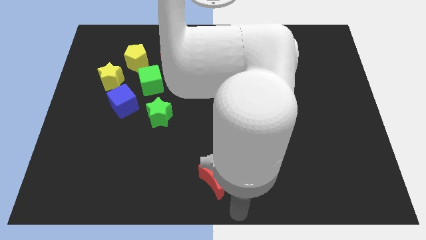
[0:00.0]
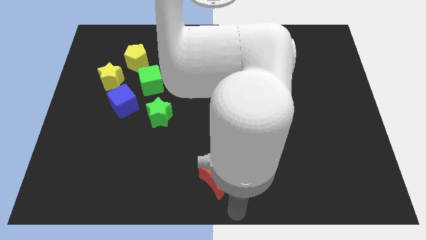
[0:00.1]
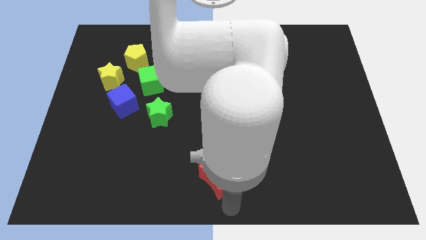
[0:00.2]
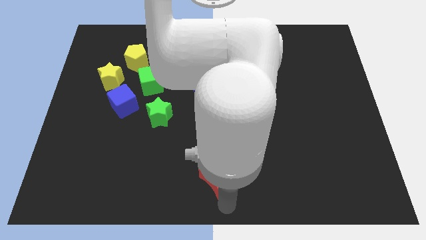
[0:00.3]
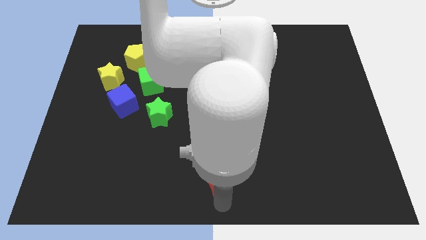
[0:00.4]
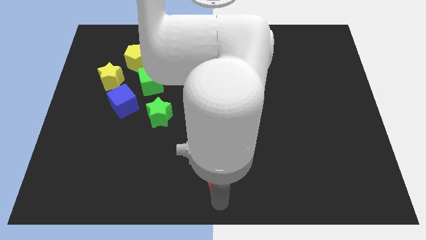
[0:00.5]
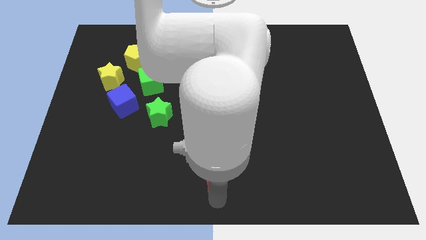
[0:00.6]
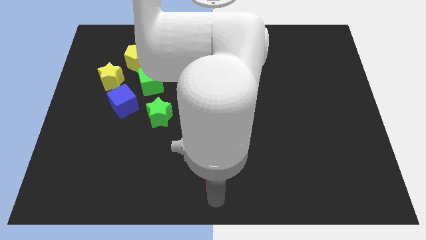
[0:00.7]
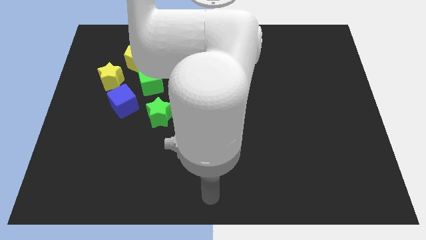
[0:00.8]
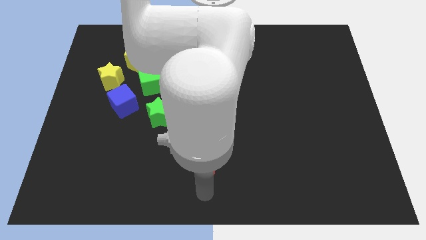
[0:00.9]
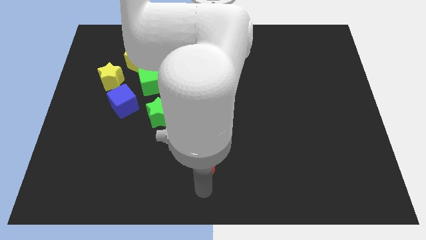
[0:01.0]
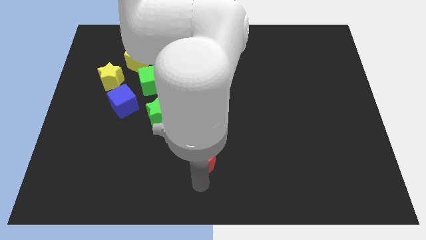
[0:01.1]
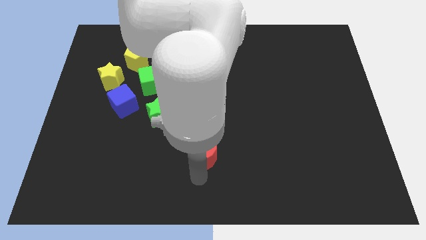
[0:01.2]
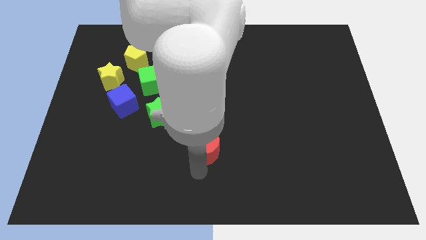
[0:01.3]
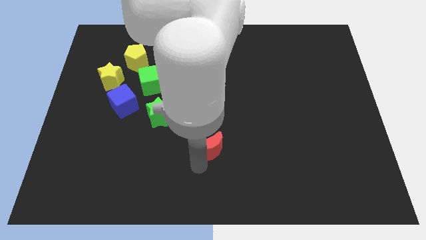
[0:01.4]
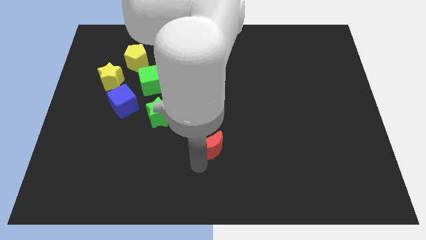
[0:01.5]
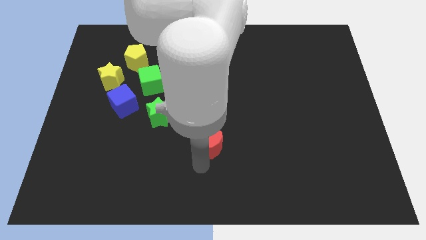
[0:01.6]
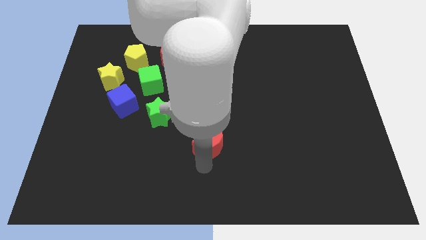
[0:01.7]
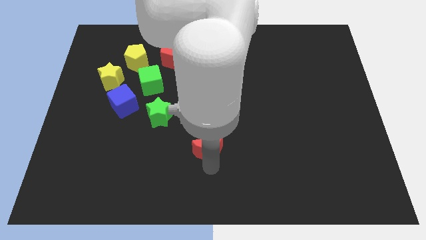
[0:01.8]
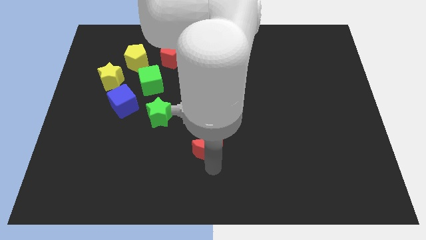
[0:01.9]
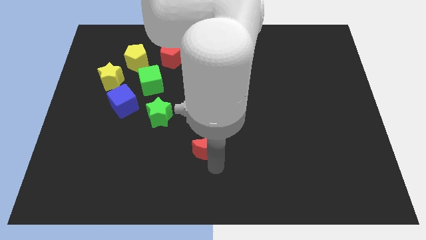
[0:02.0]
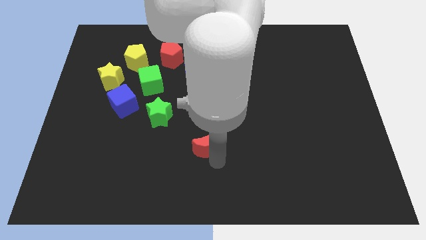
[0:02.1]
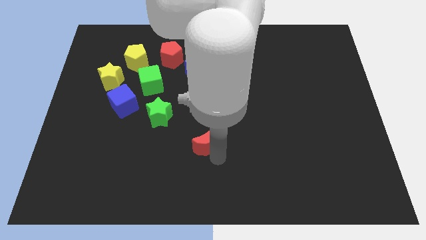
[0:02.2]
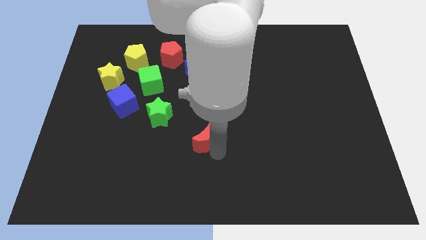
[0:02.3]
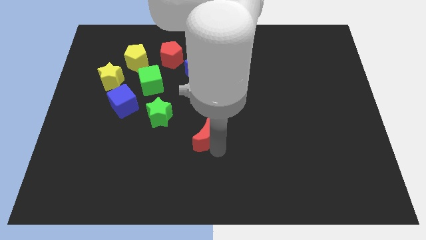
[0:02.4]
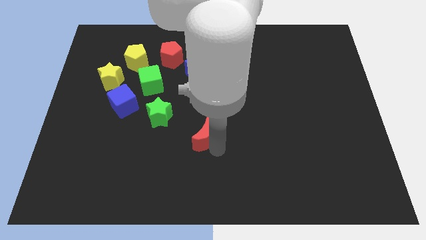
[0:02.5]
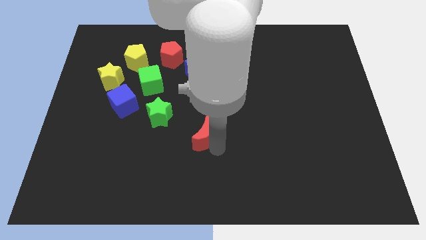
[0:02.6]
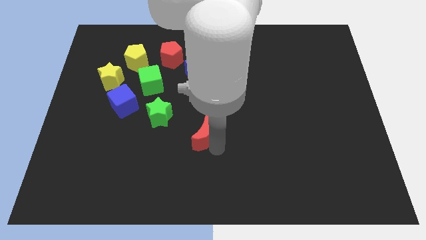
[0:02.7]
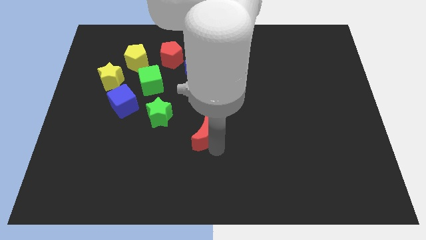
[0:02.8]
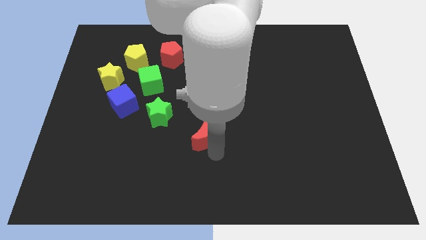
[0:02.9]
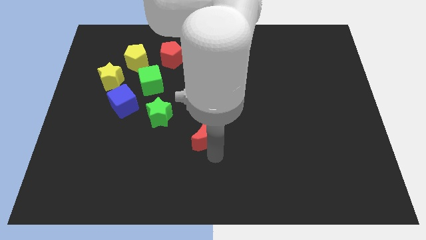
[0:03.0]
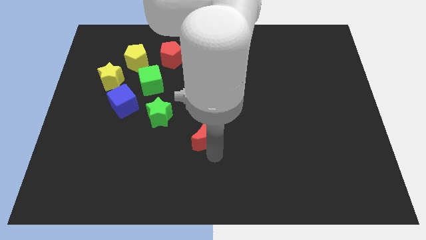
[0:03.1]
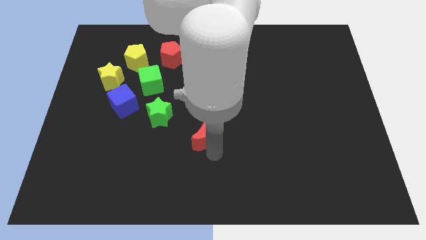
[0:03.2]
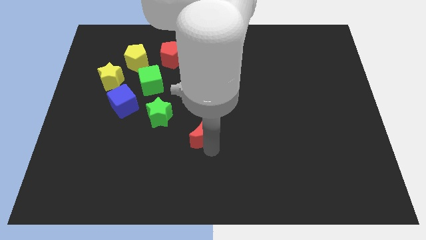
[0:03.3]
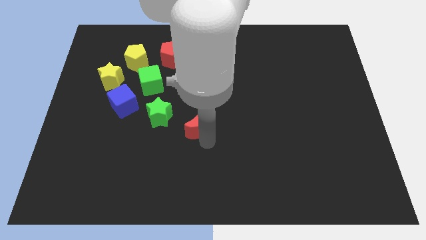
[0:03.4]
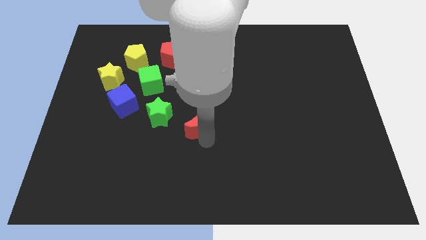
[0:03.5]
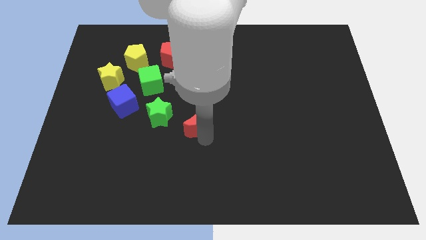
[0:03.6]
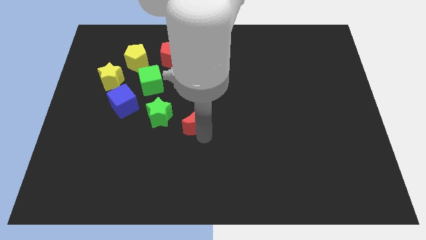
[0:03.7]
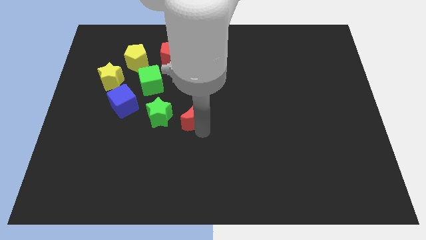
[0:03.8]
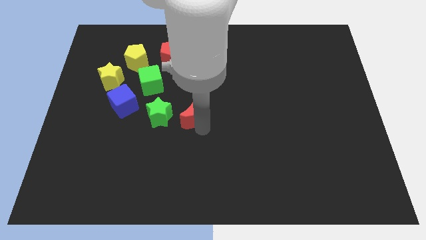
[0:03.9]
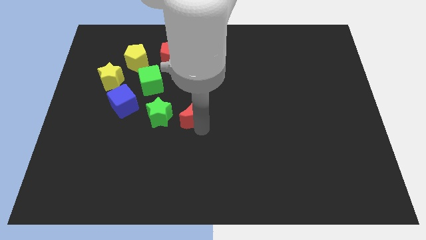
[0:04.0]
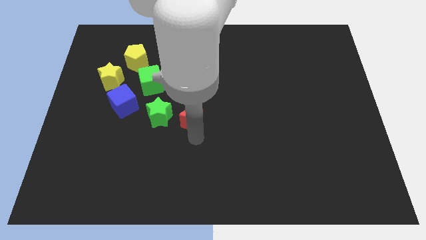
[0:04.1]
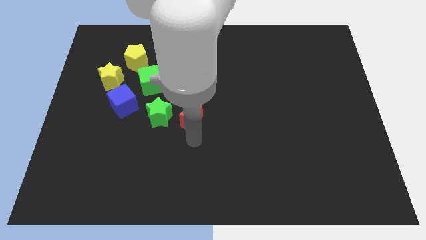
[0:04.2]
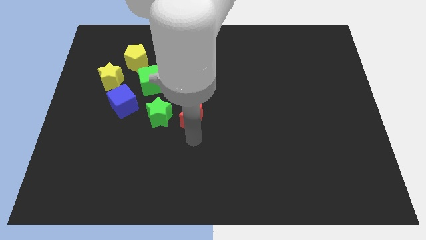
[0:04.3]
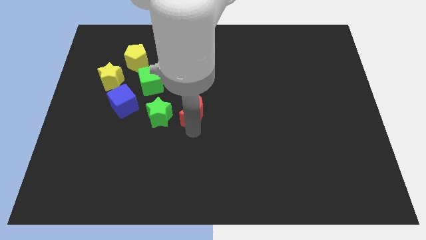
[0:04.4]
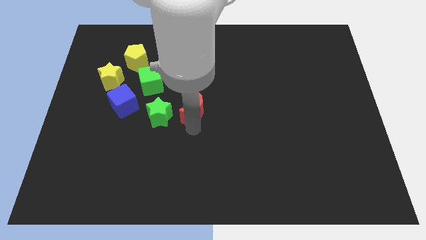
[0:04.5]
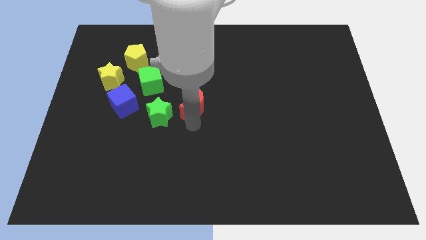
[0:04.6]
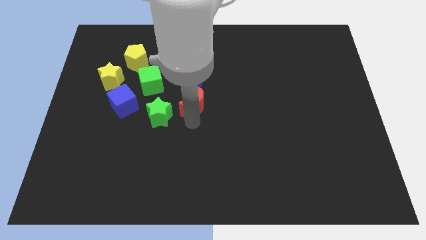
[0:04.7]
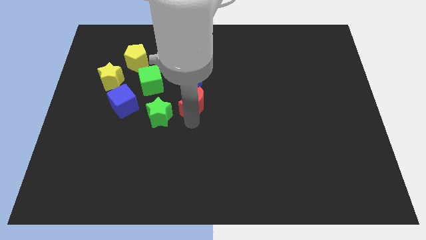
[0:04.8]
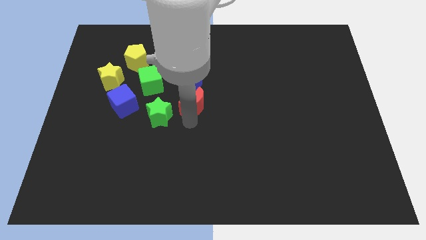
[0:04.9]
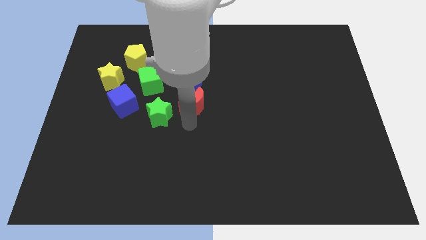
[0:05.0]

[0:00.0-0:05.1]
place red crescent down to blue crescent

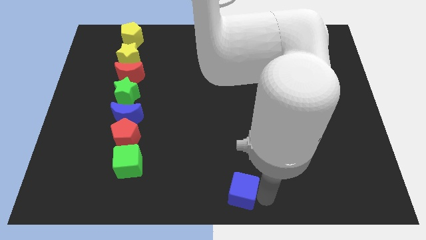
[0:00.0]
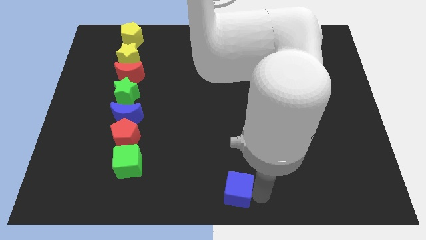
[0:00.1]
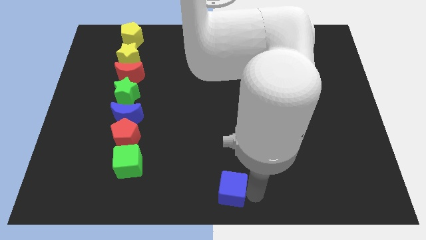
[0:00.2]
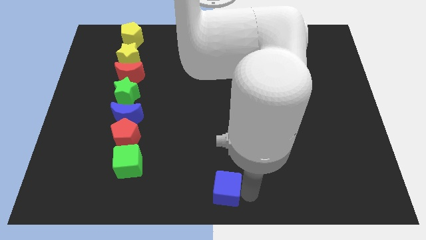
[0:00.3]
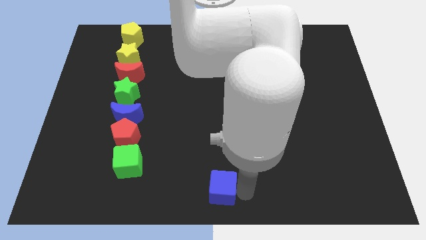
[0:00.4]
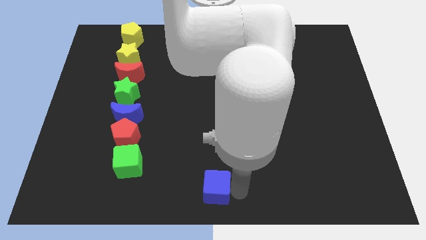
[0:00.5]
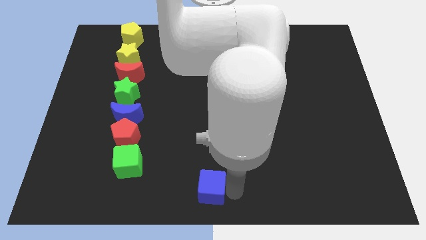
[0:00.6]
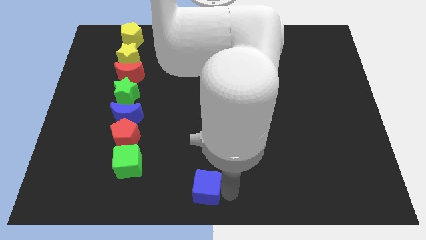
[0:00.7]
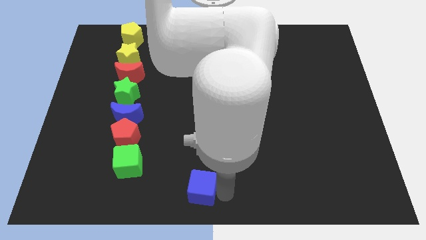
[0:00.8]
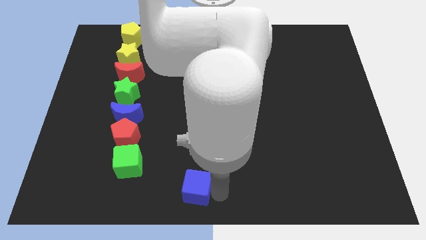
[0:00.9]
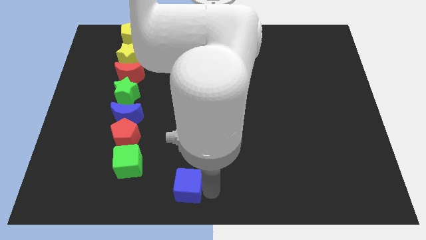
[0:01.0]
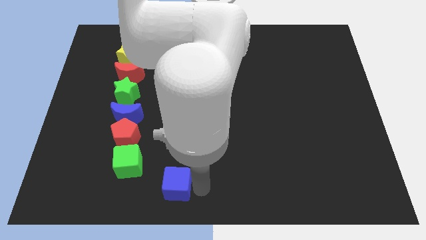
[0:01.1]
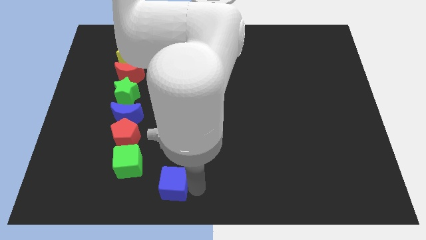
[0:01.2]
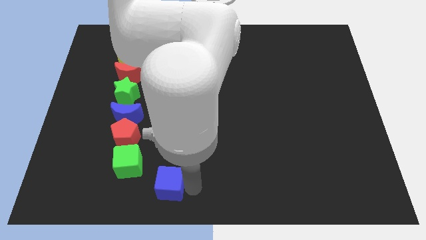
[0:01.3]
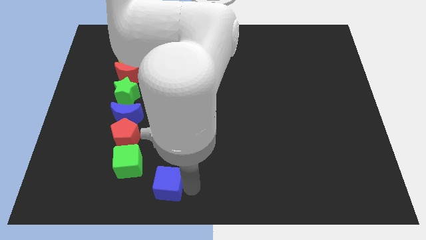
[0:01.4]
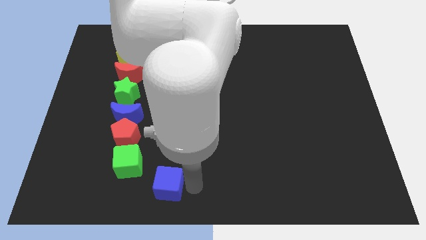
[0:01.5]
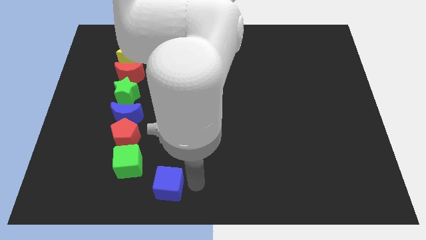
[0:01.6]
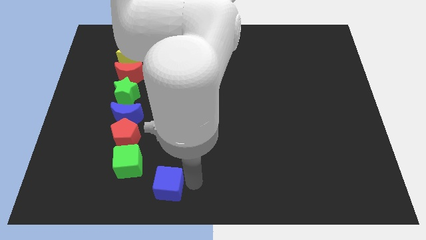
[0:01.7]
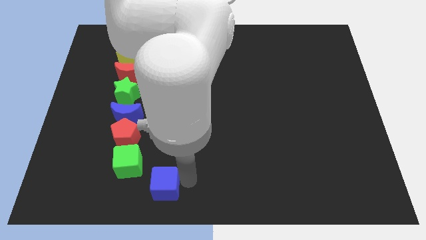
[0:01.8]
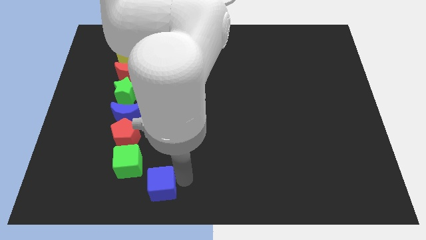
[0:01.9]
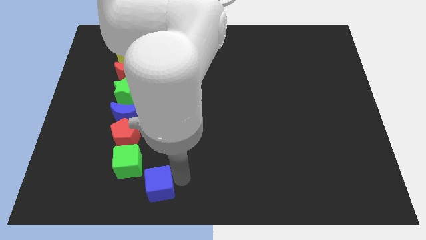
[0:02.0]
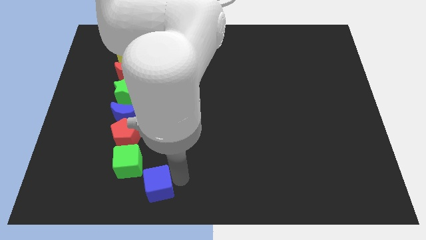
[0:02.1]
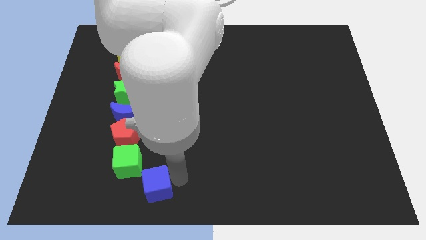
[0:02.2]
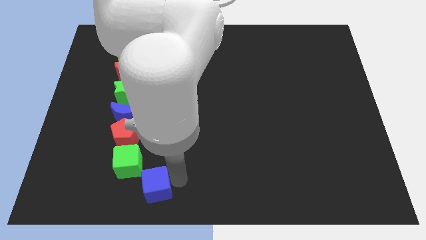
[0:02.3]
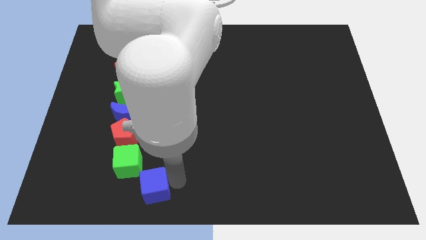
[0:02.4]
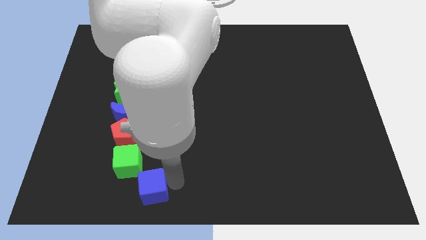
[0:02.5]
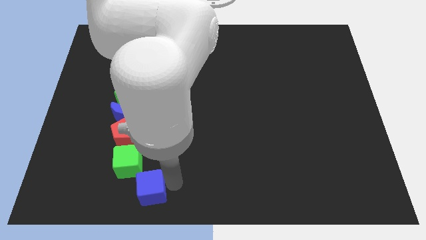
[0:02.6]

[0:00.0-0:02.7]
move blue cube right below the green cube

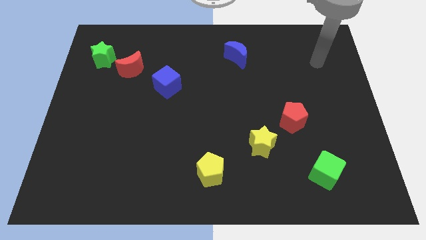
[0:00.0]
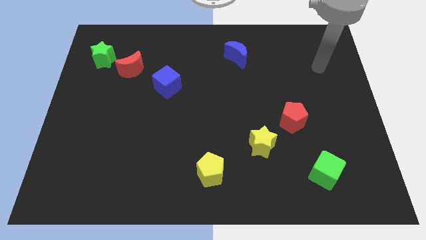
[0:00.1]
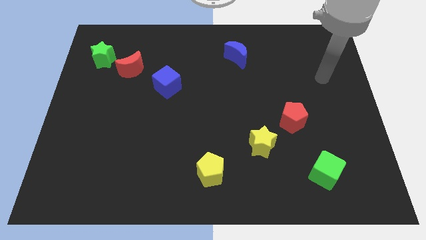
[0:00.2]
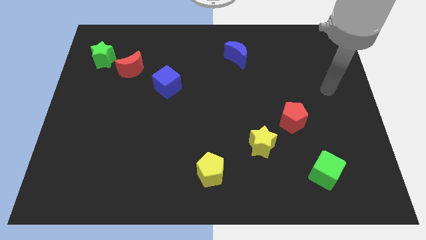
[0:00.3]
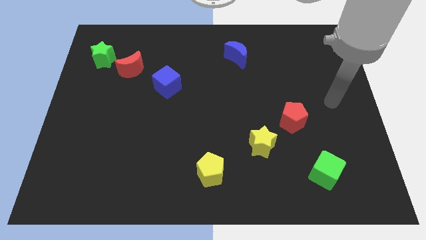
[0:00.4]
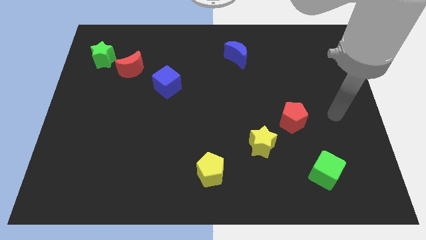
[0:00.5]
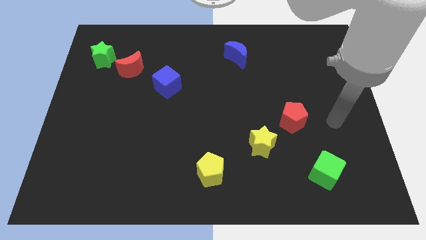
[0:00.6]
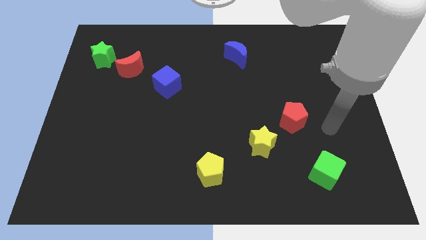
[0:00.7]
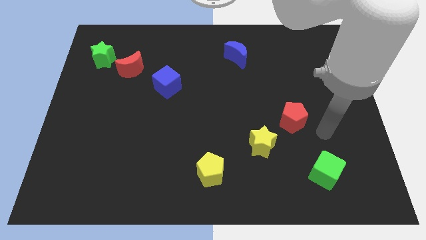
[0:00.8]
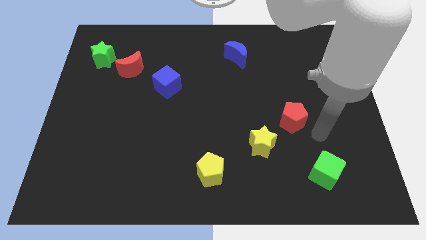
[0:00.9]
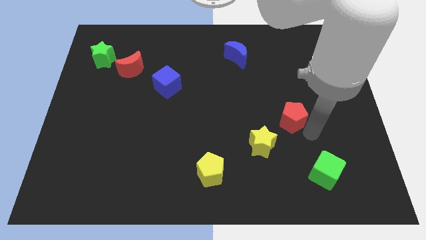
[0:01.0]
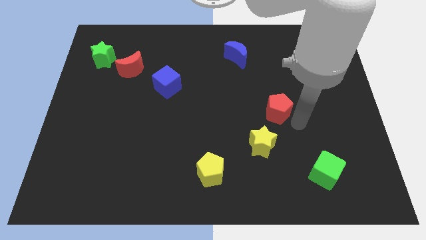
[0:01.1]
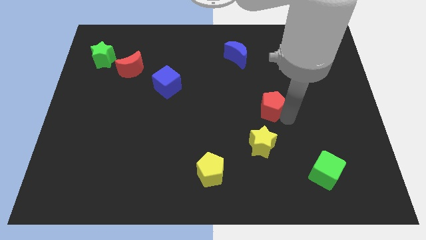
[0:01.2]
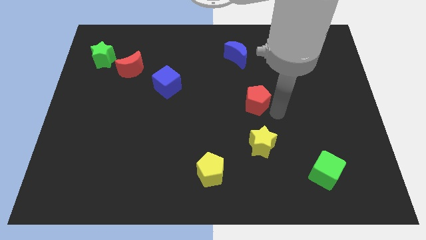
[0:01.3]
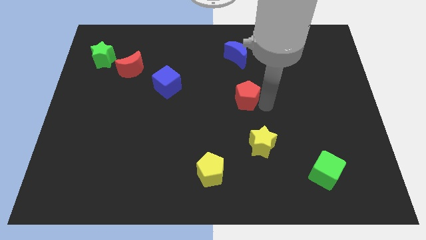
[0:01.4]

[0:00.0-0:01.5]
put the red pentagon vertically above the yellow star
